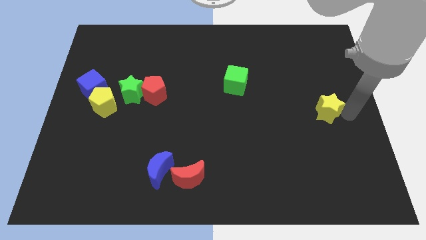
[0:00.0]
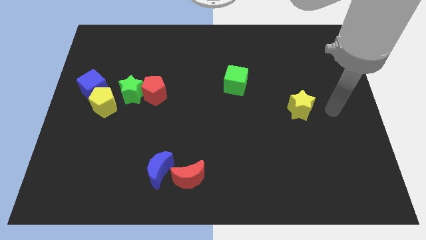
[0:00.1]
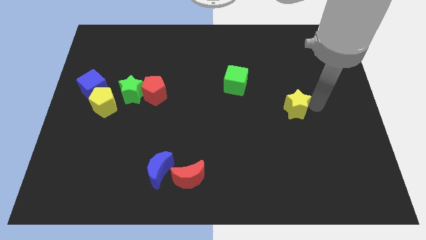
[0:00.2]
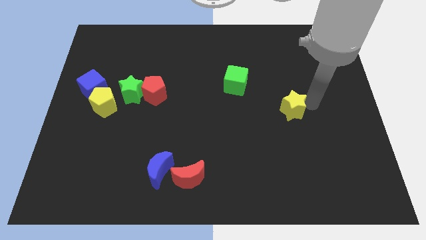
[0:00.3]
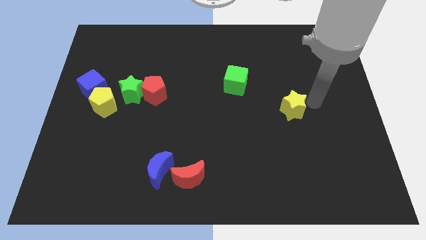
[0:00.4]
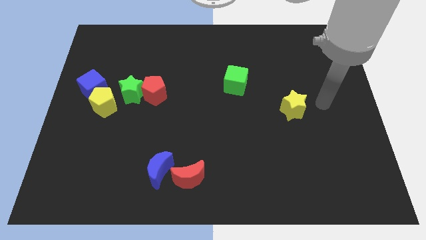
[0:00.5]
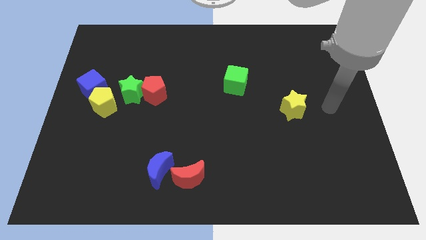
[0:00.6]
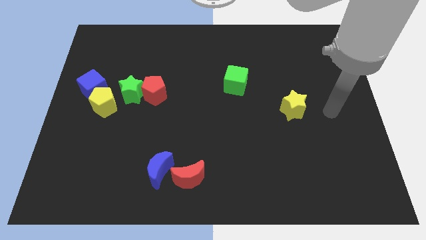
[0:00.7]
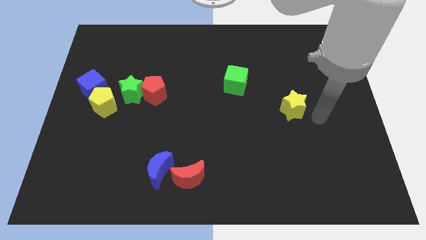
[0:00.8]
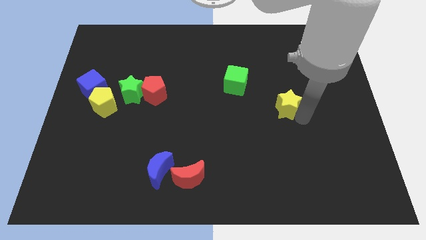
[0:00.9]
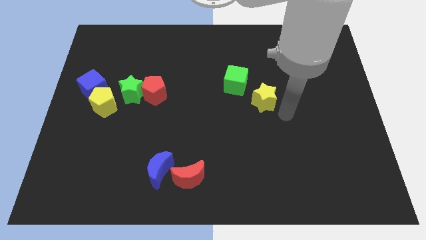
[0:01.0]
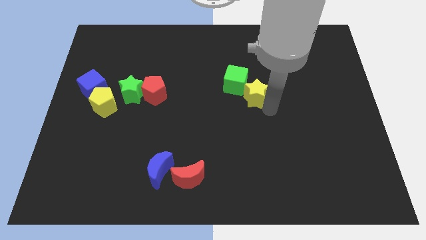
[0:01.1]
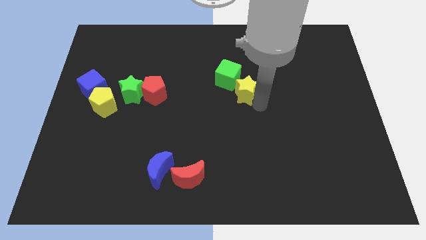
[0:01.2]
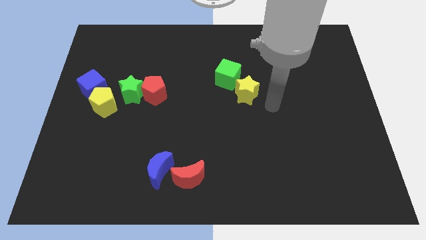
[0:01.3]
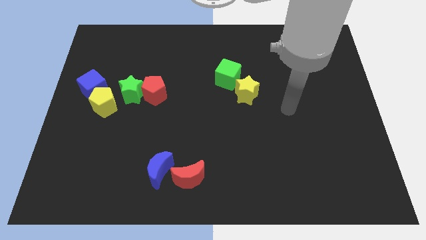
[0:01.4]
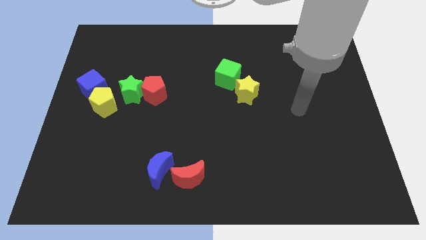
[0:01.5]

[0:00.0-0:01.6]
push the yellow star into the green cube

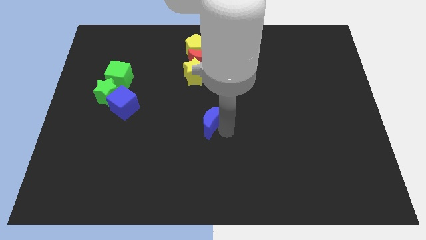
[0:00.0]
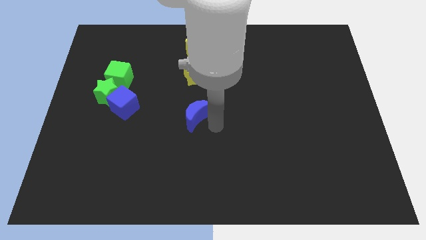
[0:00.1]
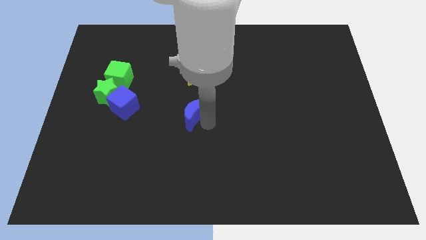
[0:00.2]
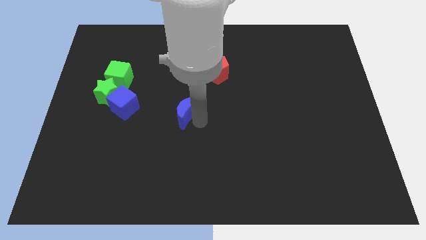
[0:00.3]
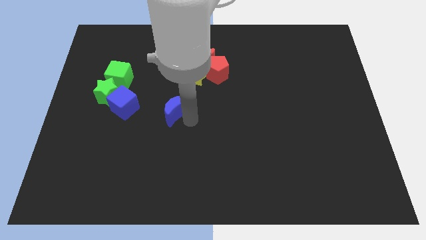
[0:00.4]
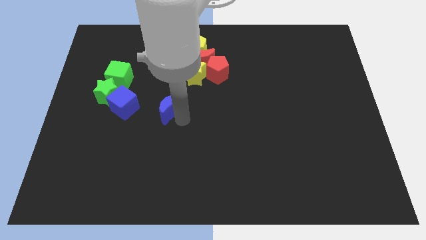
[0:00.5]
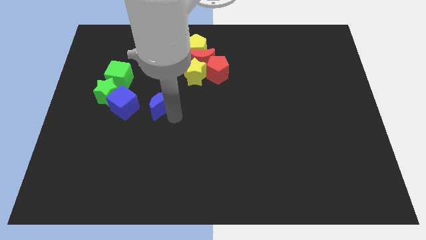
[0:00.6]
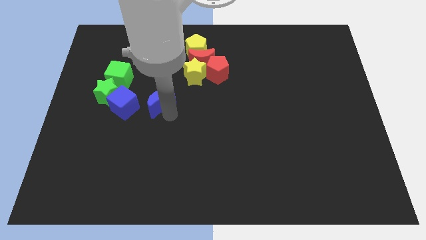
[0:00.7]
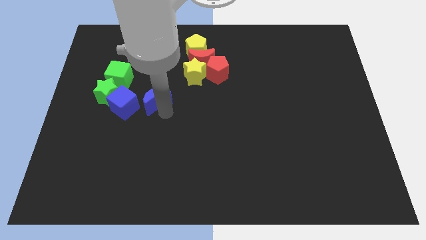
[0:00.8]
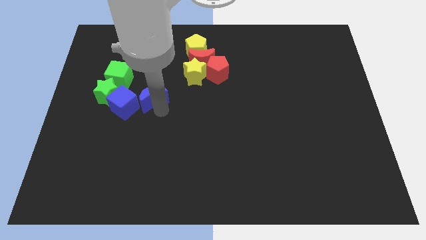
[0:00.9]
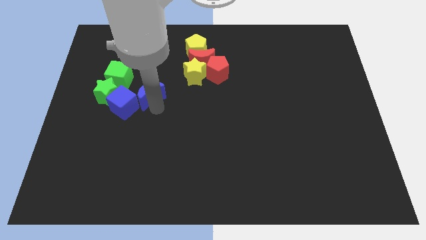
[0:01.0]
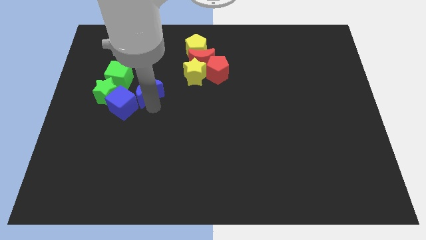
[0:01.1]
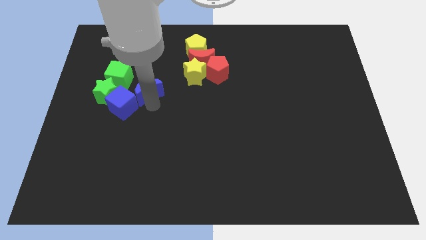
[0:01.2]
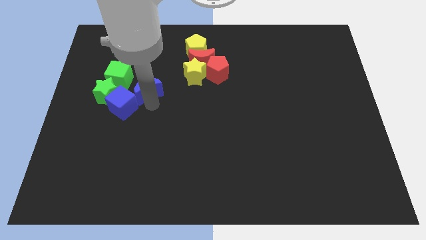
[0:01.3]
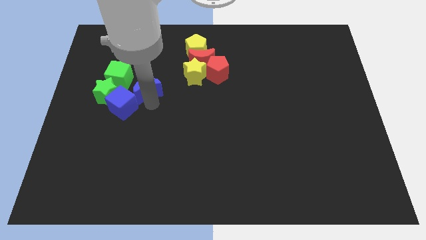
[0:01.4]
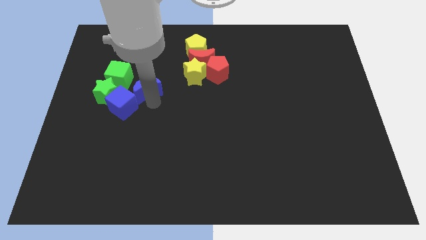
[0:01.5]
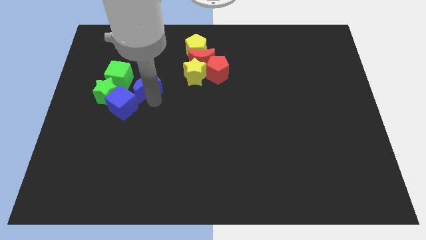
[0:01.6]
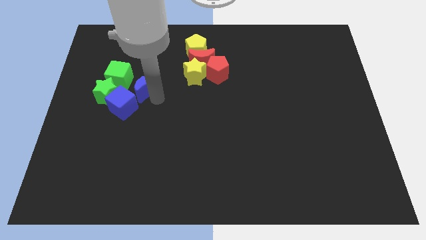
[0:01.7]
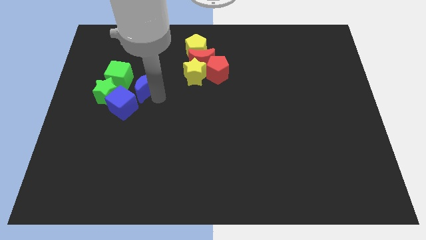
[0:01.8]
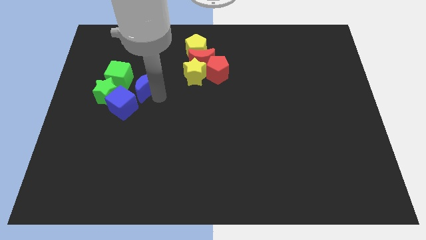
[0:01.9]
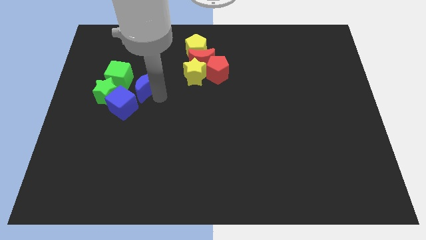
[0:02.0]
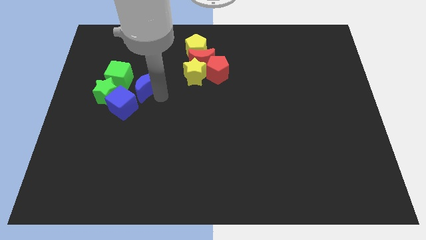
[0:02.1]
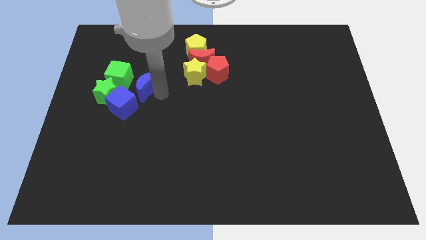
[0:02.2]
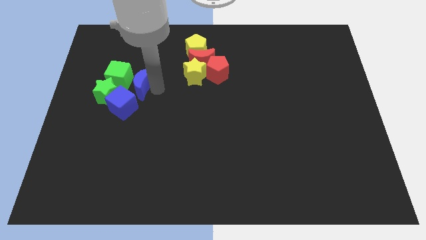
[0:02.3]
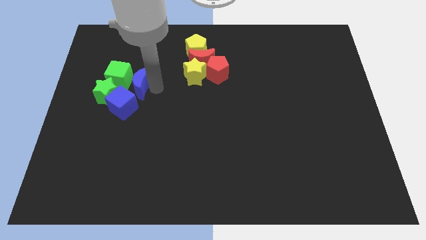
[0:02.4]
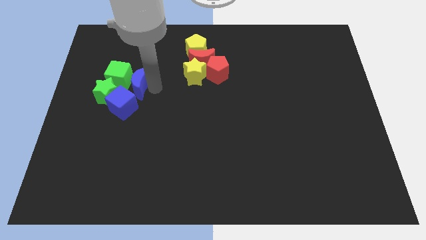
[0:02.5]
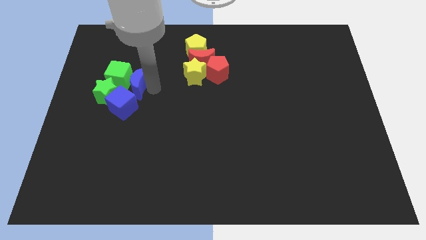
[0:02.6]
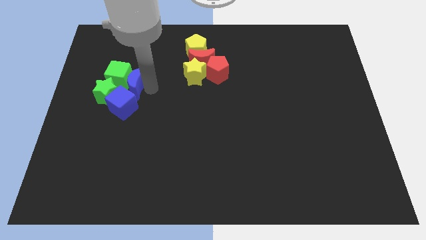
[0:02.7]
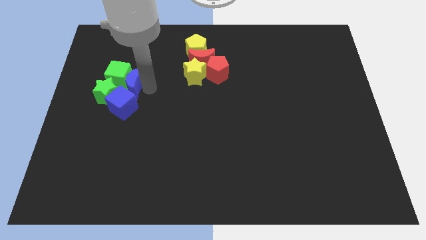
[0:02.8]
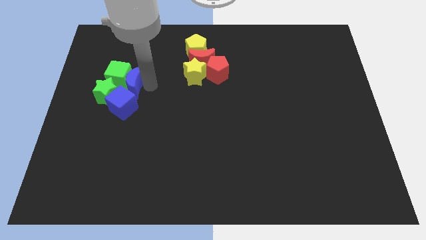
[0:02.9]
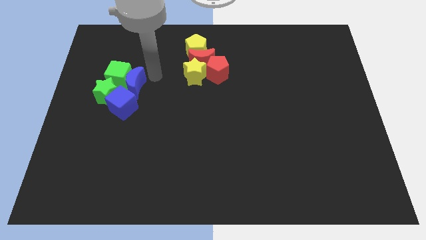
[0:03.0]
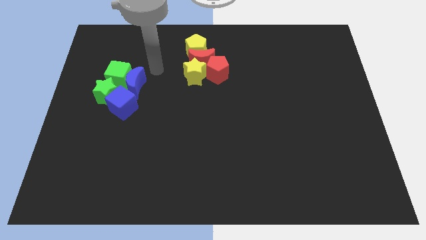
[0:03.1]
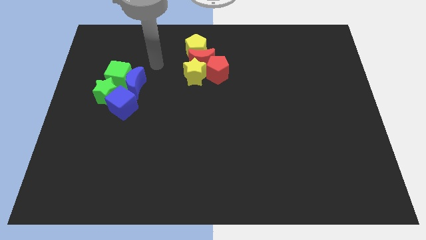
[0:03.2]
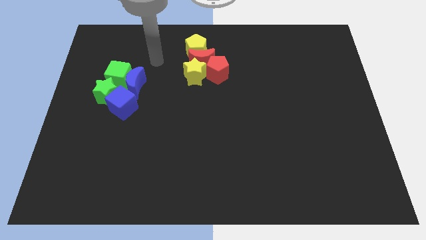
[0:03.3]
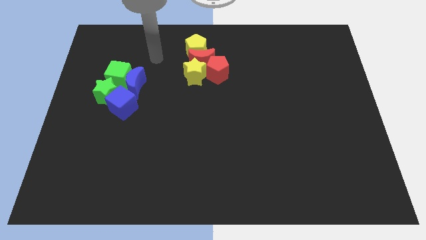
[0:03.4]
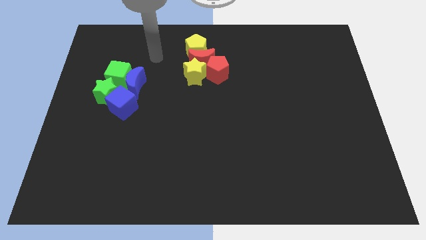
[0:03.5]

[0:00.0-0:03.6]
move the blue crescent right to the green cube

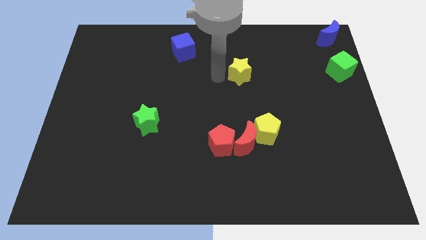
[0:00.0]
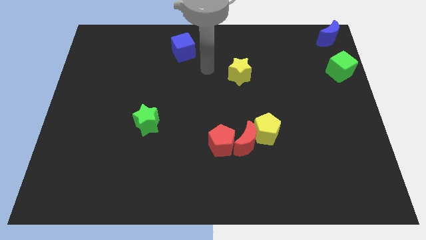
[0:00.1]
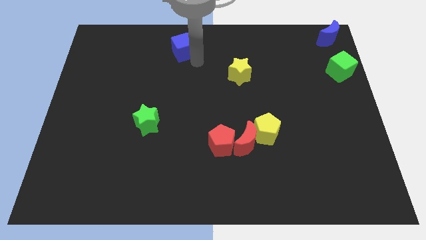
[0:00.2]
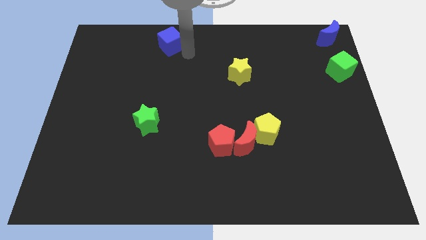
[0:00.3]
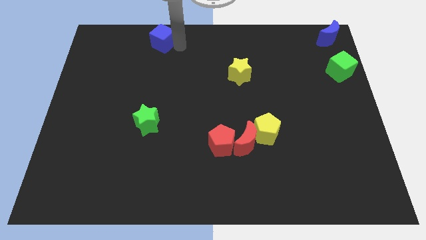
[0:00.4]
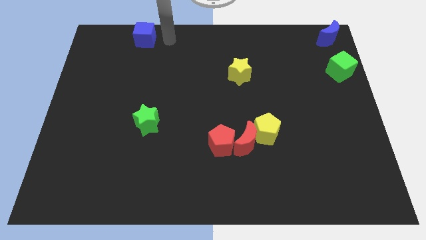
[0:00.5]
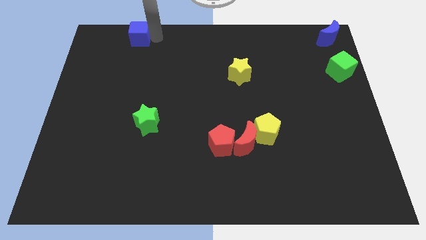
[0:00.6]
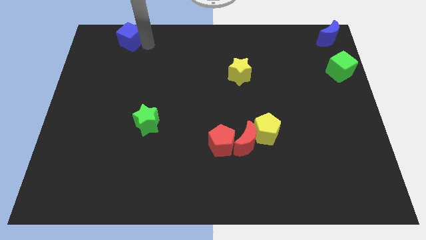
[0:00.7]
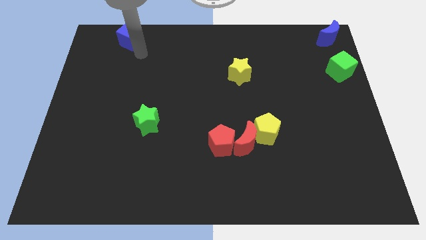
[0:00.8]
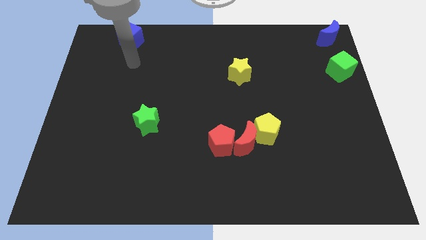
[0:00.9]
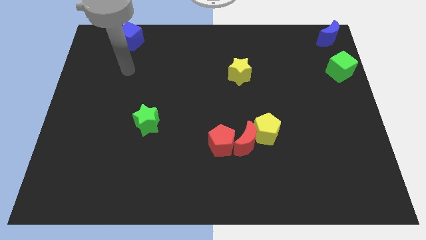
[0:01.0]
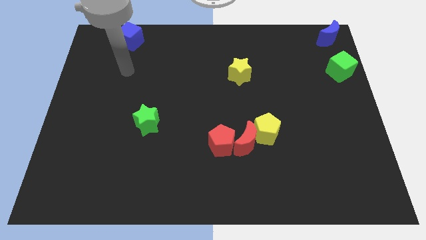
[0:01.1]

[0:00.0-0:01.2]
push the blue cube towards the top left corner

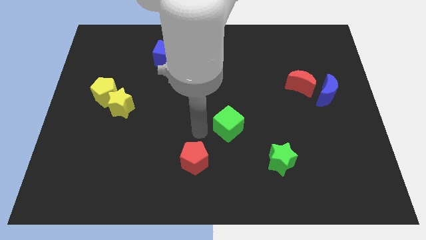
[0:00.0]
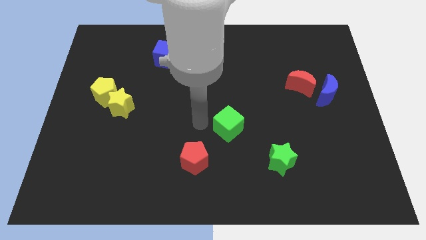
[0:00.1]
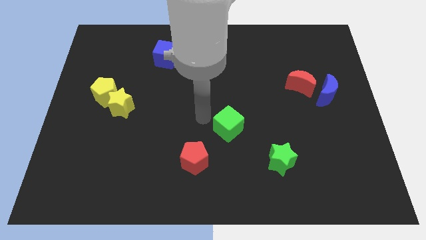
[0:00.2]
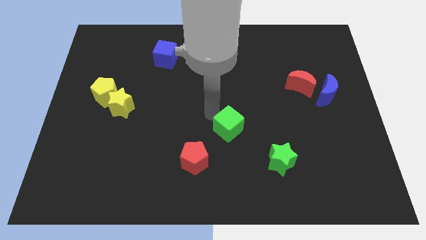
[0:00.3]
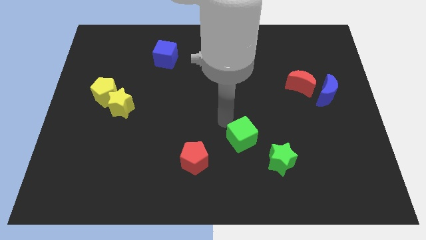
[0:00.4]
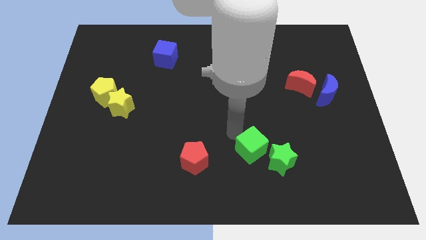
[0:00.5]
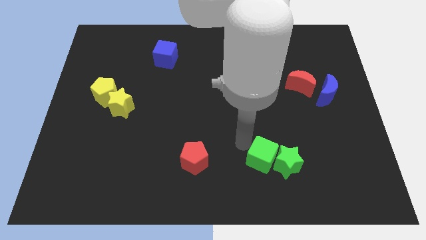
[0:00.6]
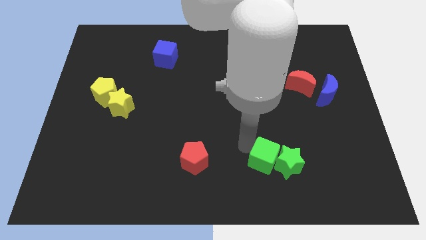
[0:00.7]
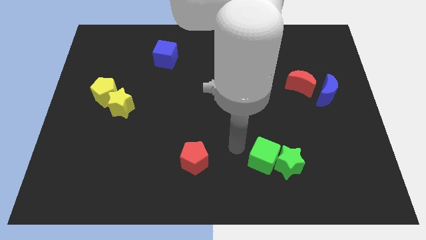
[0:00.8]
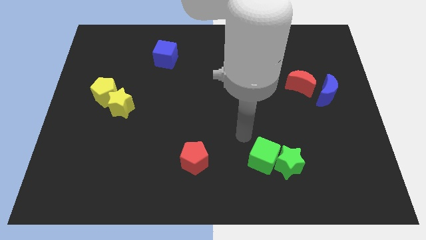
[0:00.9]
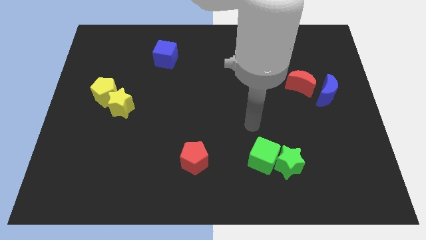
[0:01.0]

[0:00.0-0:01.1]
push the green cube and place it next to the green star

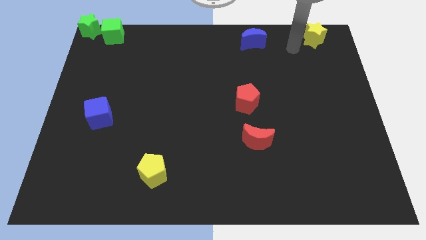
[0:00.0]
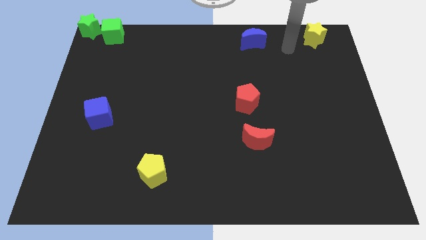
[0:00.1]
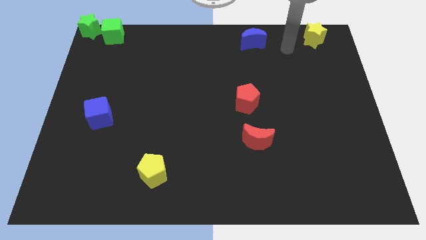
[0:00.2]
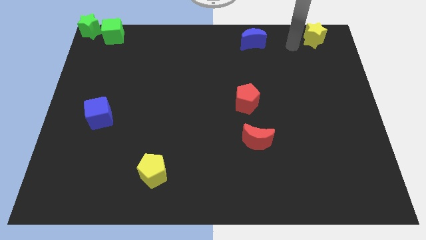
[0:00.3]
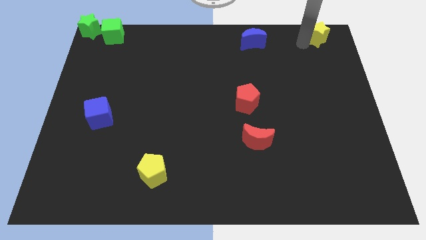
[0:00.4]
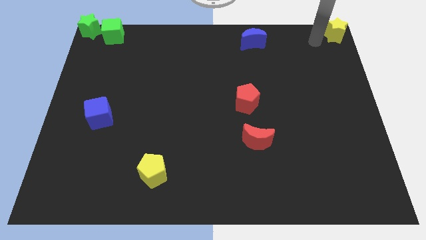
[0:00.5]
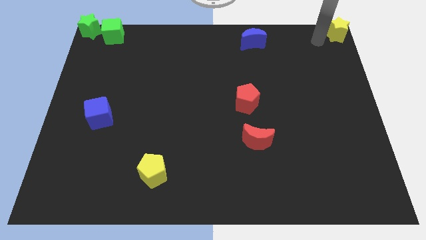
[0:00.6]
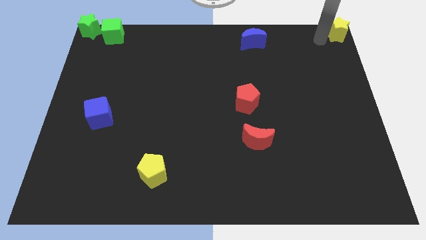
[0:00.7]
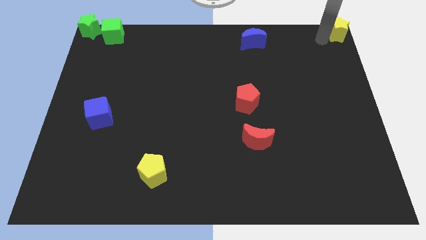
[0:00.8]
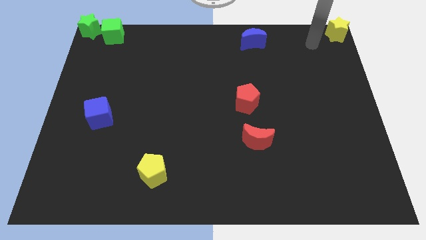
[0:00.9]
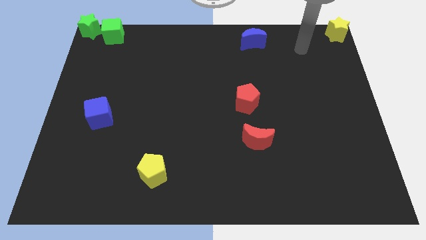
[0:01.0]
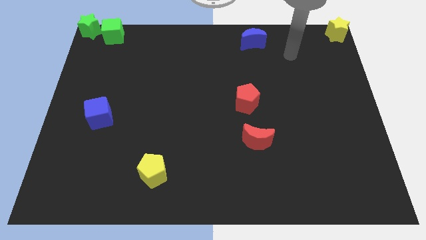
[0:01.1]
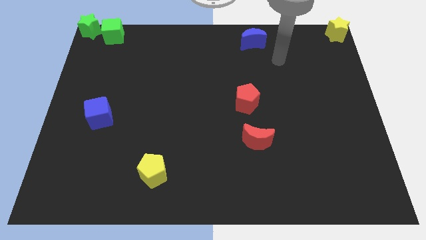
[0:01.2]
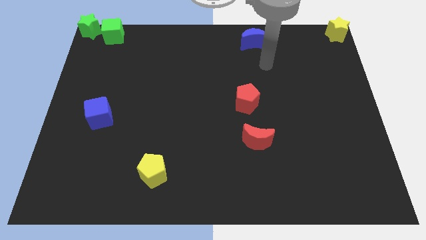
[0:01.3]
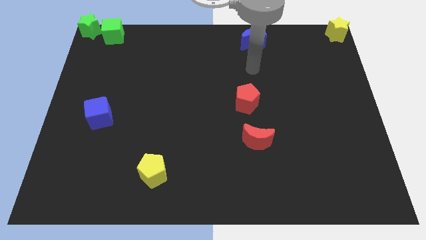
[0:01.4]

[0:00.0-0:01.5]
place the yellow star at the top right corner
